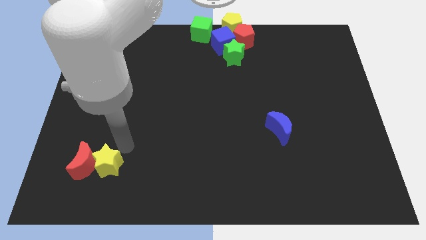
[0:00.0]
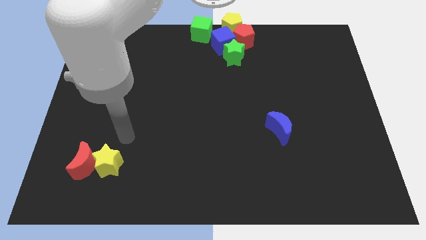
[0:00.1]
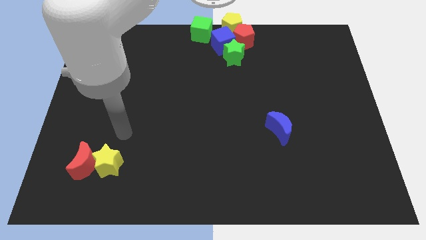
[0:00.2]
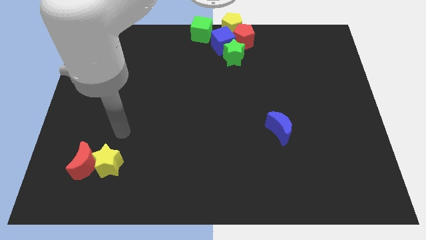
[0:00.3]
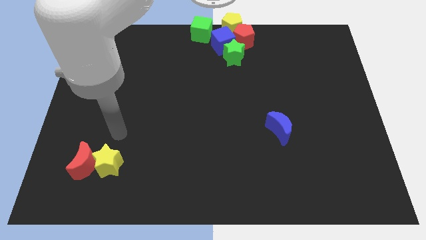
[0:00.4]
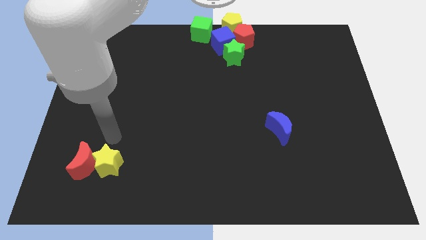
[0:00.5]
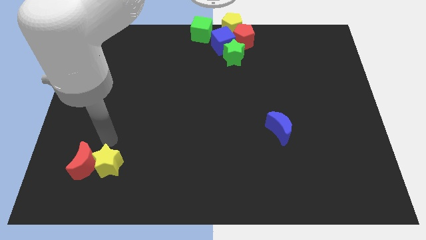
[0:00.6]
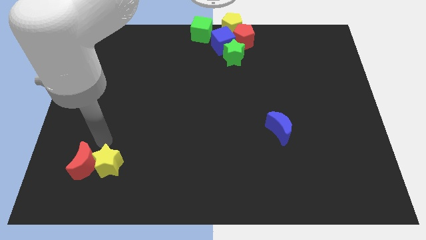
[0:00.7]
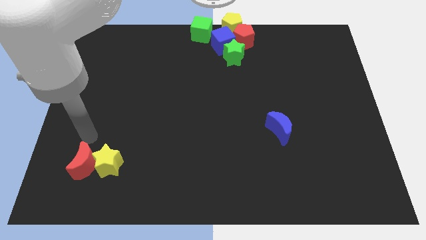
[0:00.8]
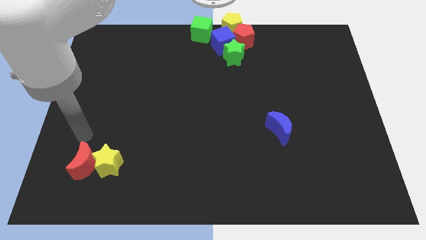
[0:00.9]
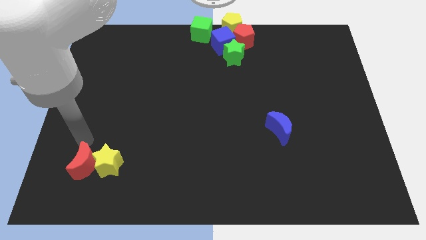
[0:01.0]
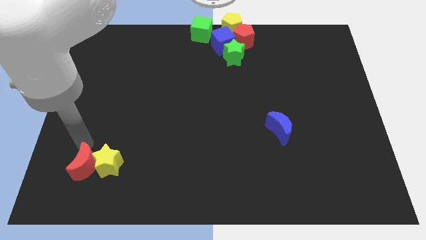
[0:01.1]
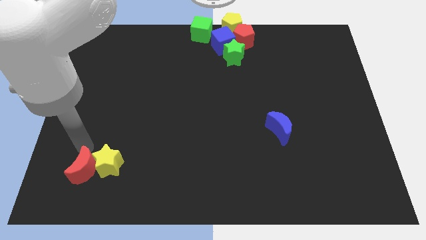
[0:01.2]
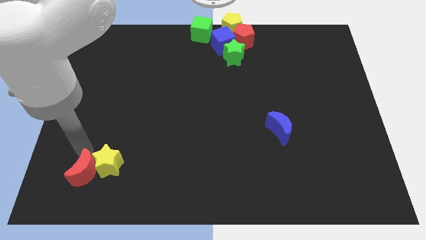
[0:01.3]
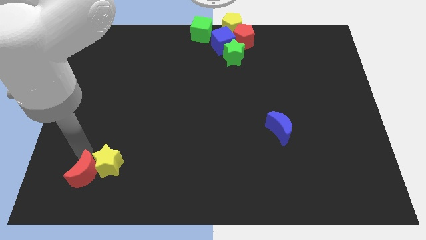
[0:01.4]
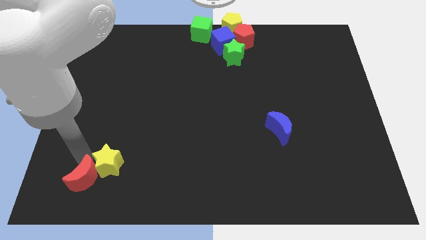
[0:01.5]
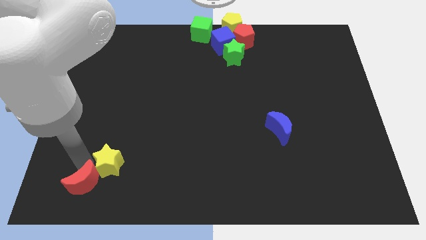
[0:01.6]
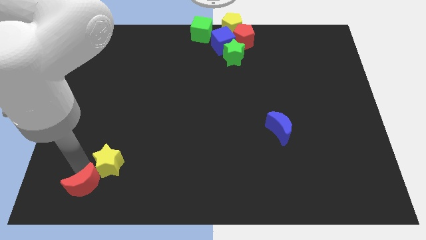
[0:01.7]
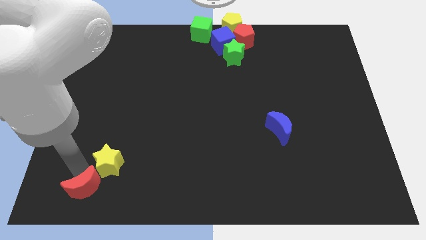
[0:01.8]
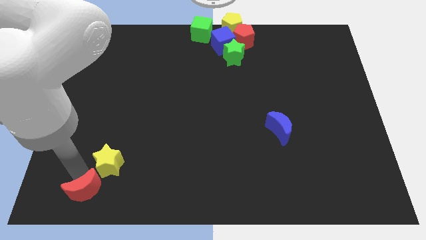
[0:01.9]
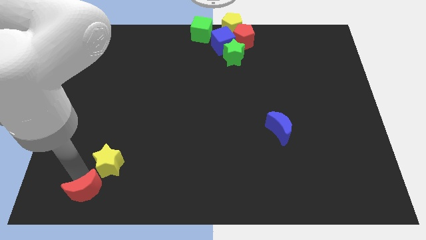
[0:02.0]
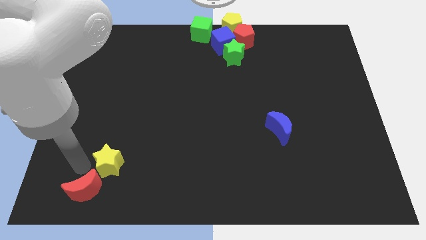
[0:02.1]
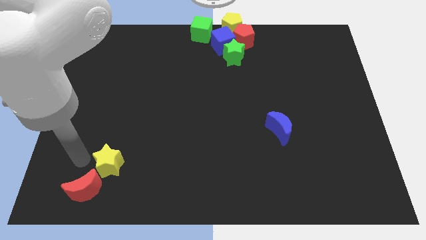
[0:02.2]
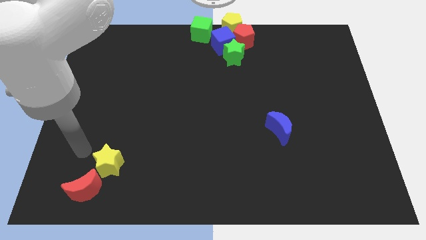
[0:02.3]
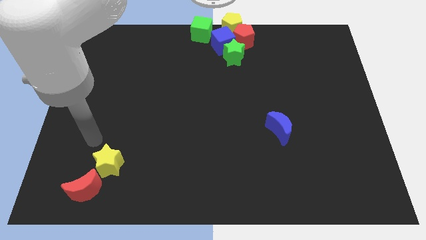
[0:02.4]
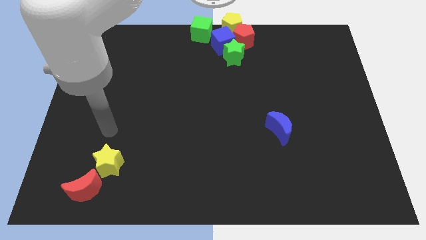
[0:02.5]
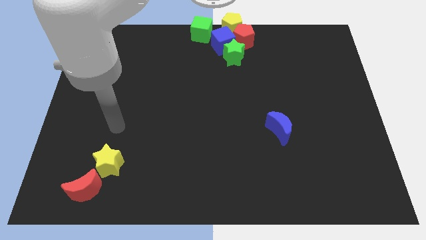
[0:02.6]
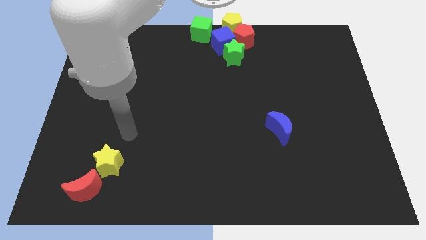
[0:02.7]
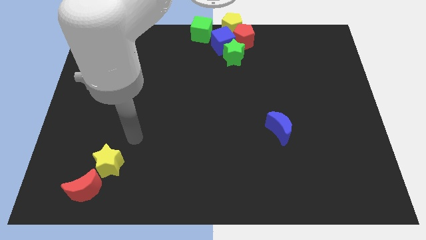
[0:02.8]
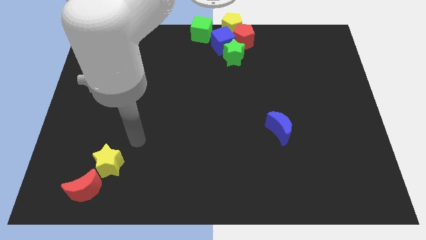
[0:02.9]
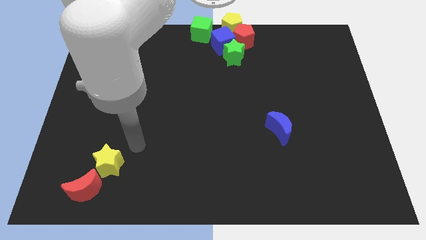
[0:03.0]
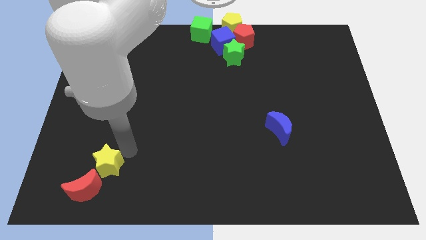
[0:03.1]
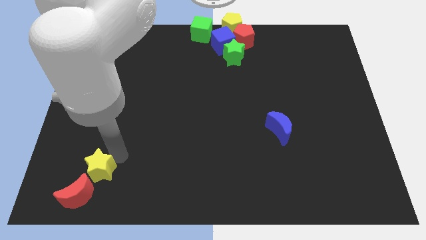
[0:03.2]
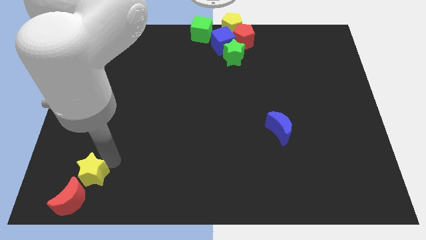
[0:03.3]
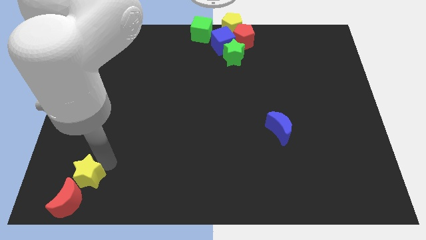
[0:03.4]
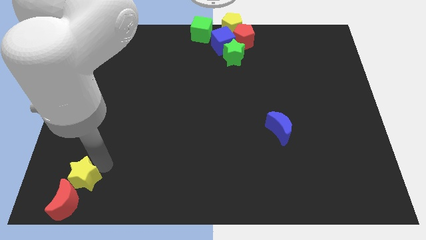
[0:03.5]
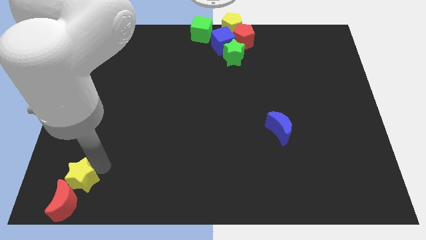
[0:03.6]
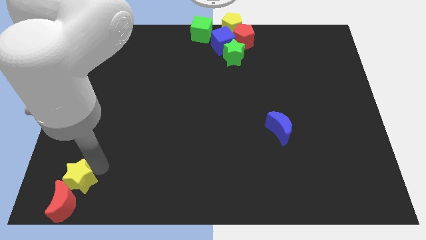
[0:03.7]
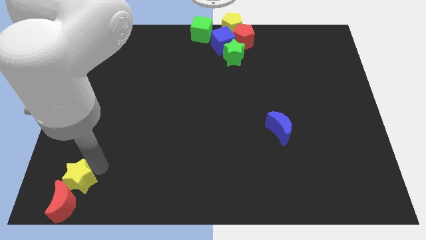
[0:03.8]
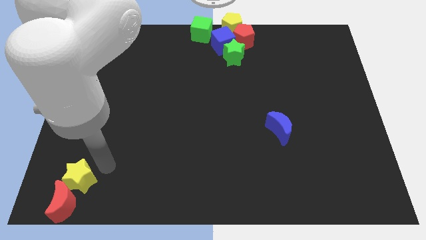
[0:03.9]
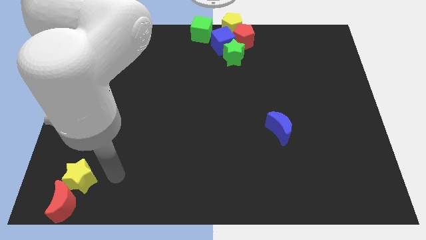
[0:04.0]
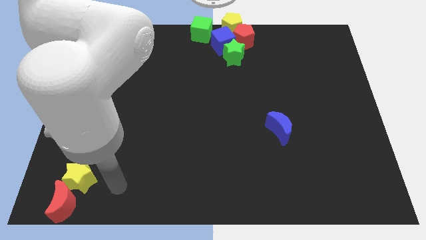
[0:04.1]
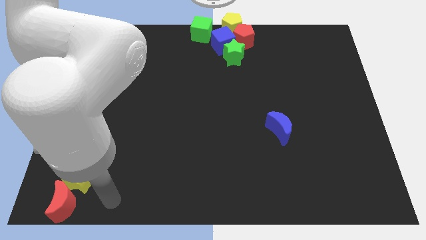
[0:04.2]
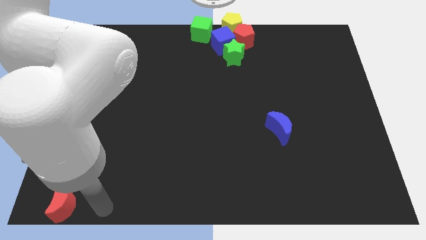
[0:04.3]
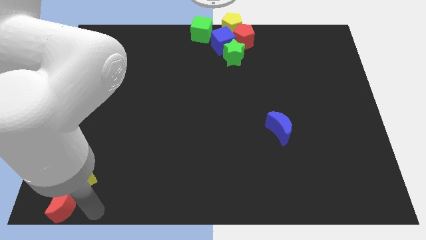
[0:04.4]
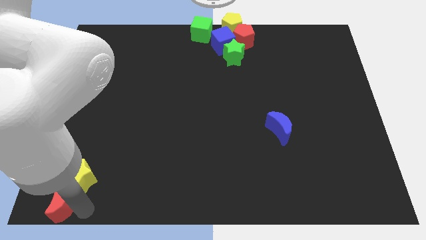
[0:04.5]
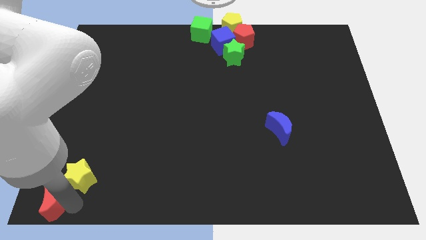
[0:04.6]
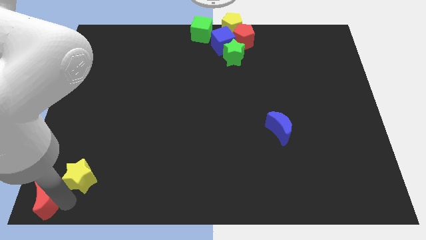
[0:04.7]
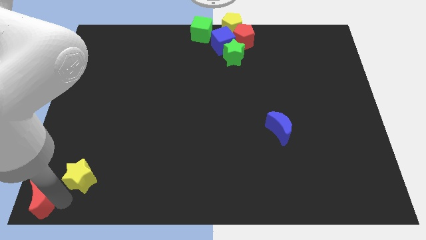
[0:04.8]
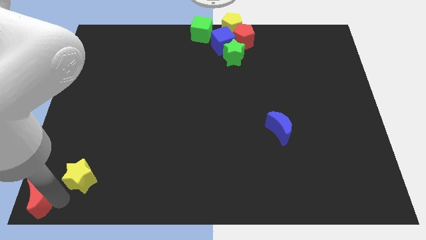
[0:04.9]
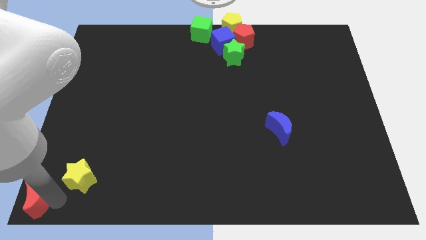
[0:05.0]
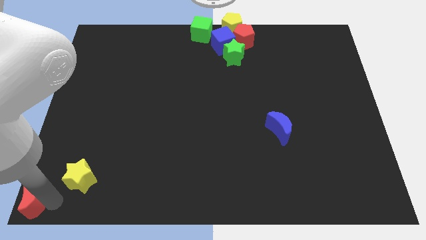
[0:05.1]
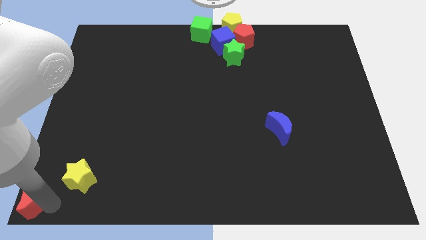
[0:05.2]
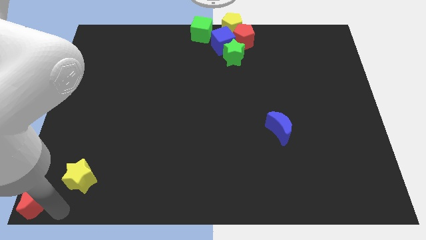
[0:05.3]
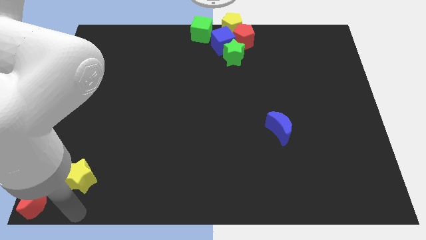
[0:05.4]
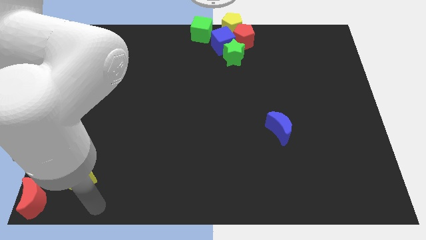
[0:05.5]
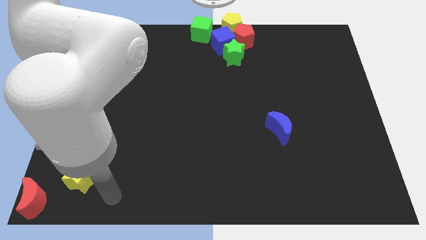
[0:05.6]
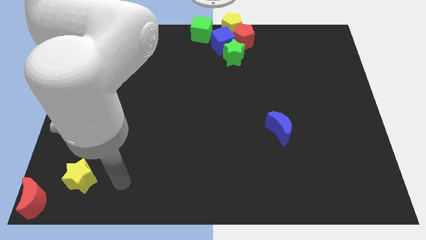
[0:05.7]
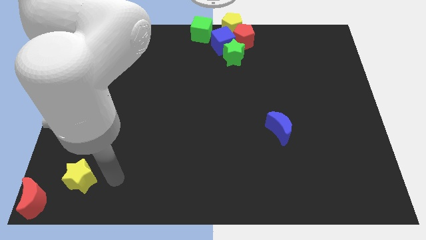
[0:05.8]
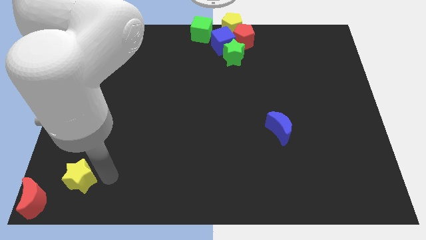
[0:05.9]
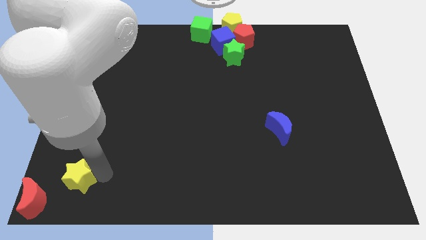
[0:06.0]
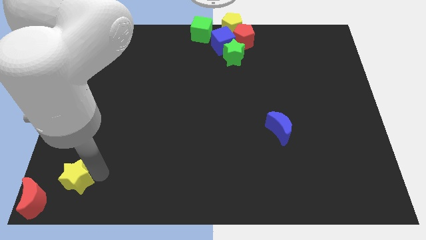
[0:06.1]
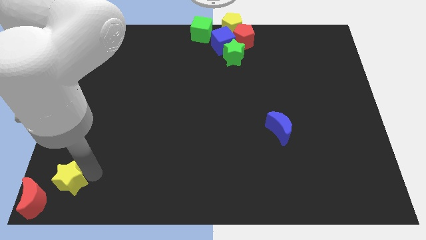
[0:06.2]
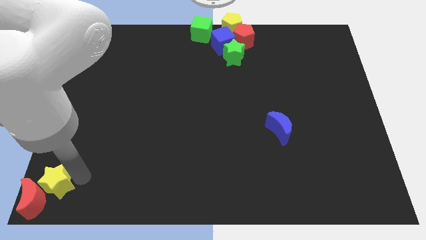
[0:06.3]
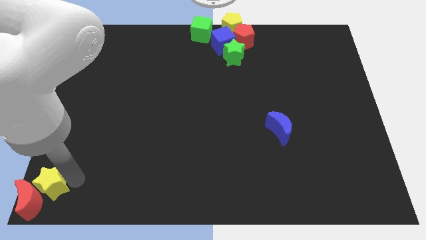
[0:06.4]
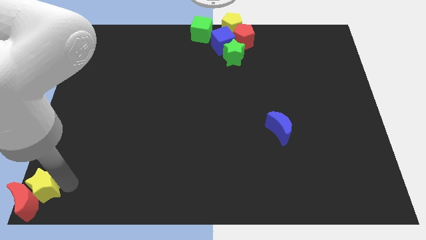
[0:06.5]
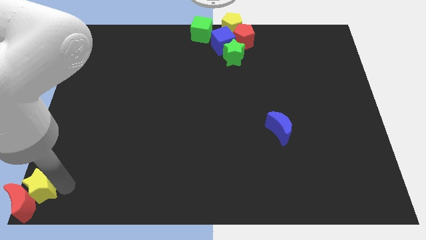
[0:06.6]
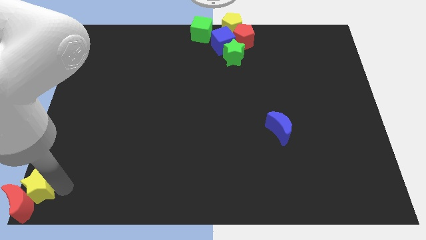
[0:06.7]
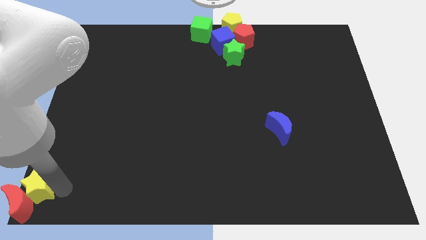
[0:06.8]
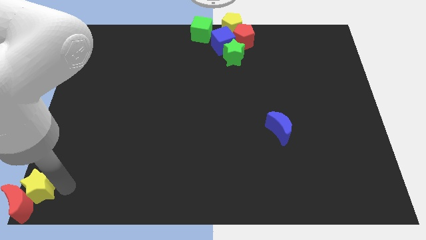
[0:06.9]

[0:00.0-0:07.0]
put the red crescent and yellow star to the bottom left corner of the board

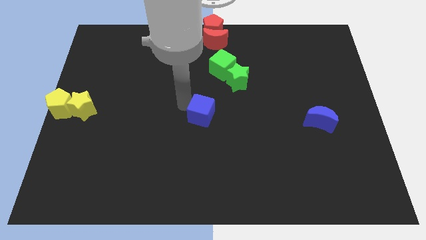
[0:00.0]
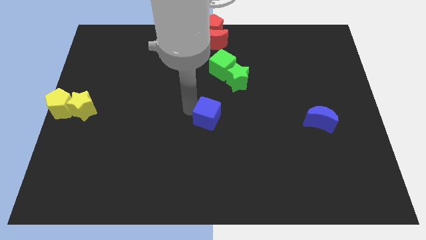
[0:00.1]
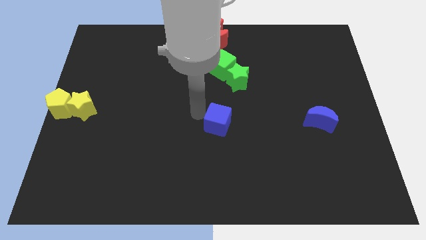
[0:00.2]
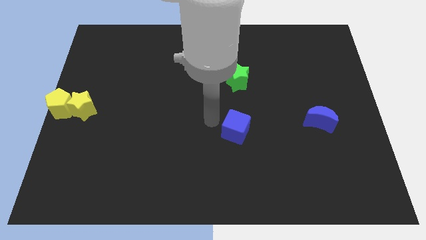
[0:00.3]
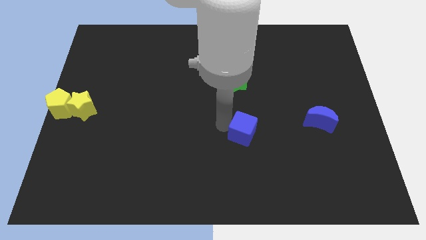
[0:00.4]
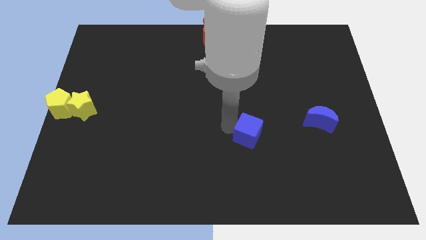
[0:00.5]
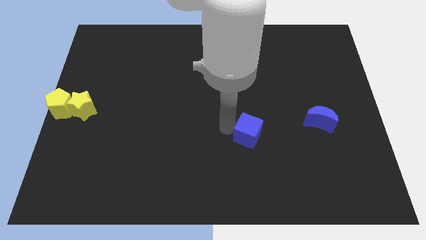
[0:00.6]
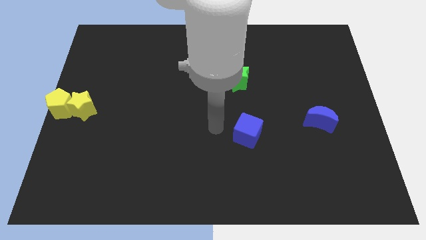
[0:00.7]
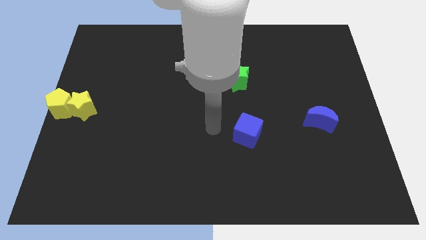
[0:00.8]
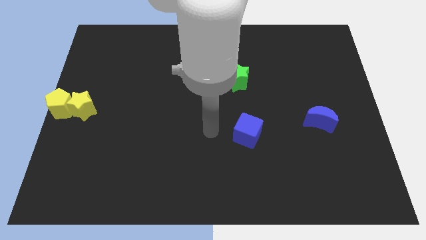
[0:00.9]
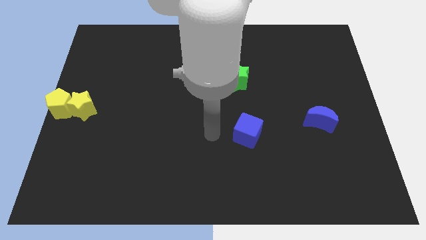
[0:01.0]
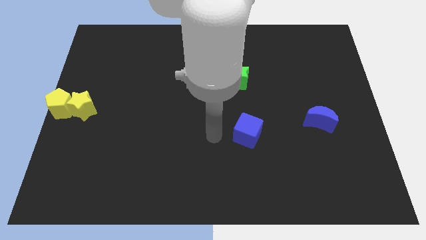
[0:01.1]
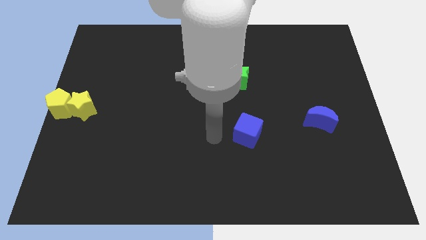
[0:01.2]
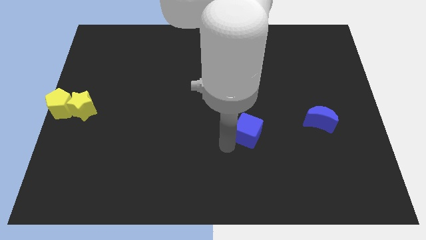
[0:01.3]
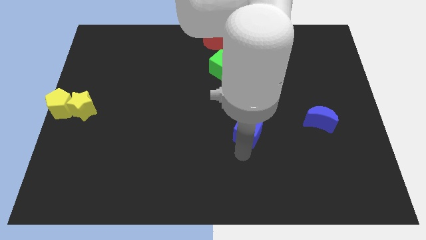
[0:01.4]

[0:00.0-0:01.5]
push the blue cube horizontally to the left side of the blue crescent

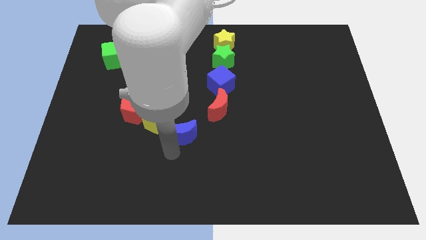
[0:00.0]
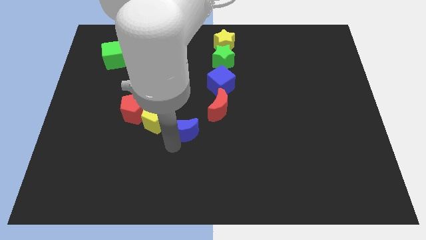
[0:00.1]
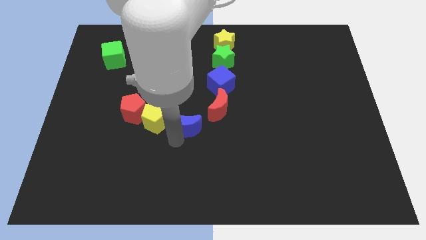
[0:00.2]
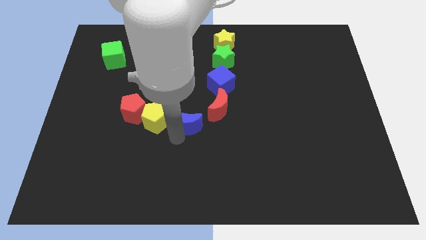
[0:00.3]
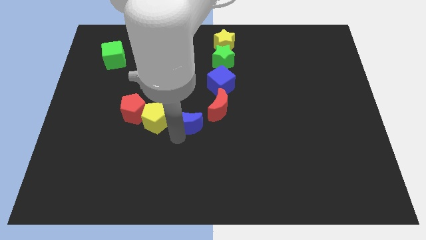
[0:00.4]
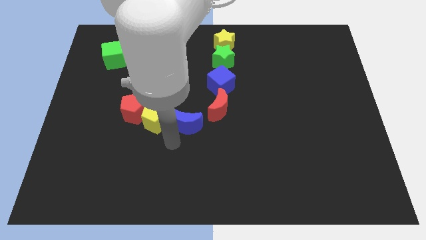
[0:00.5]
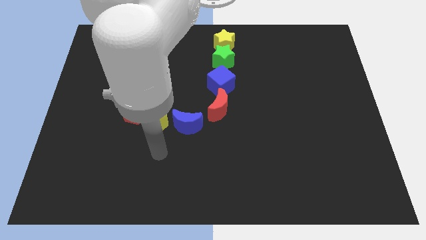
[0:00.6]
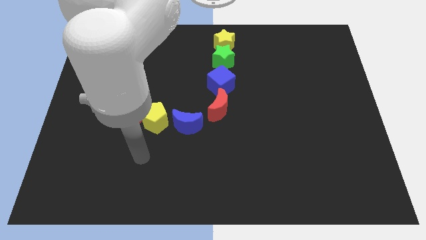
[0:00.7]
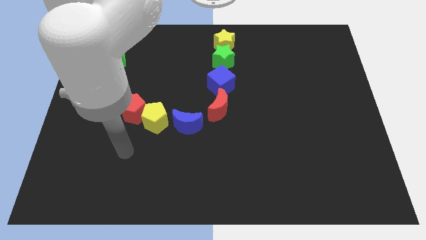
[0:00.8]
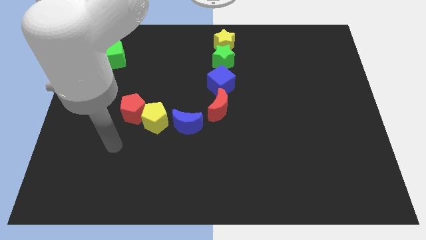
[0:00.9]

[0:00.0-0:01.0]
place the blue crescent to the right of the yellow pentagon
